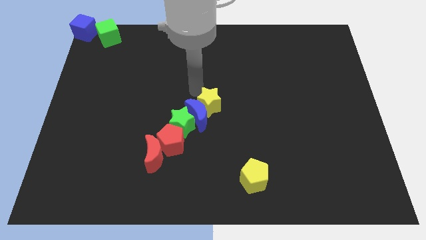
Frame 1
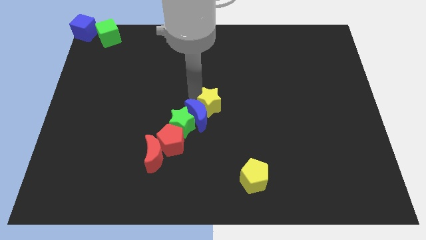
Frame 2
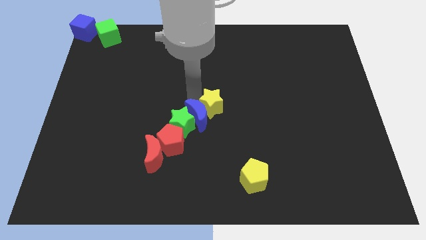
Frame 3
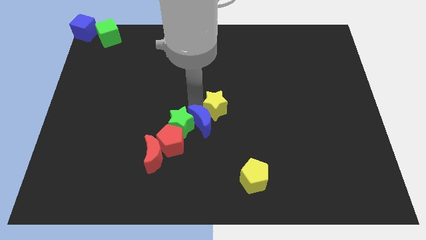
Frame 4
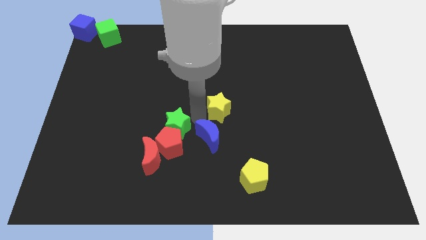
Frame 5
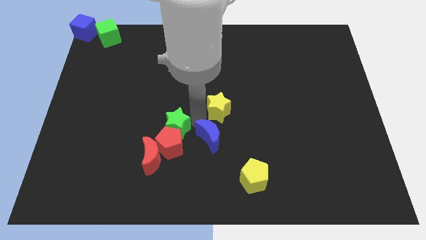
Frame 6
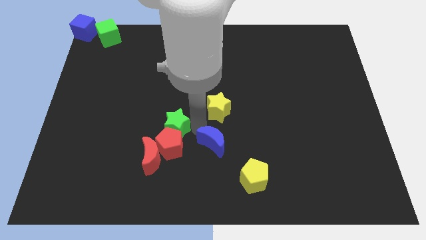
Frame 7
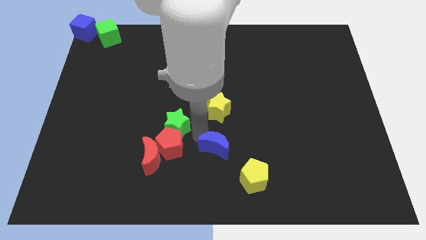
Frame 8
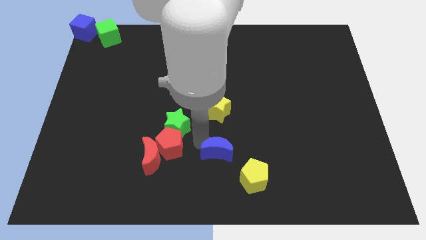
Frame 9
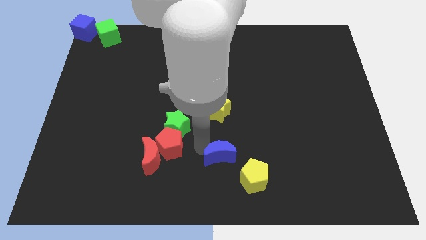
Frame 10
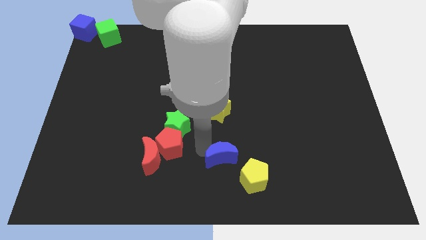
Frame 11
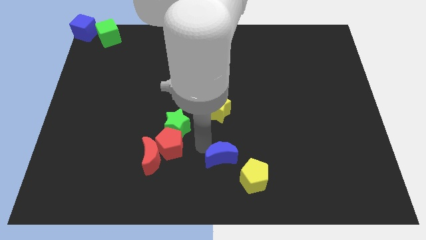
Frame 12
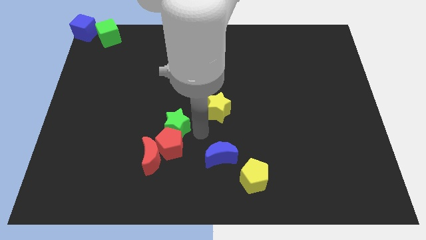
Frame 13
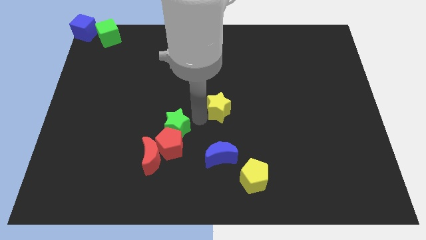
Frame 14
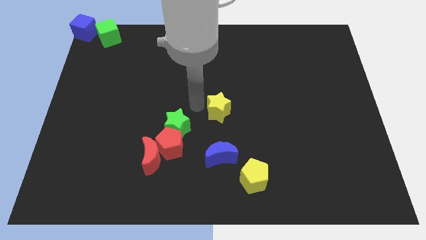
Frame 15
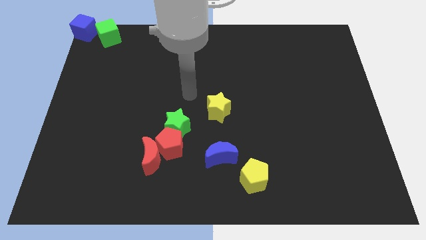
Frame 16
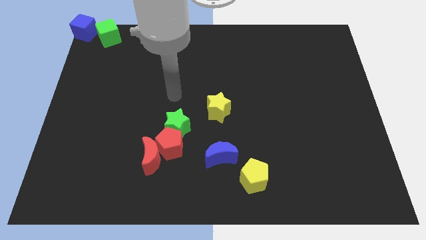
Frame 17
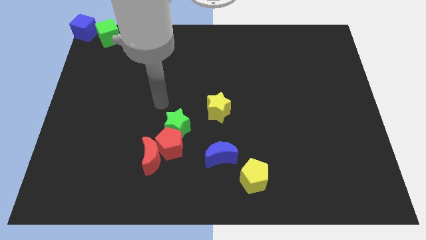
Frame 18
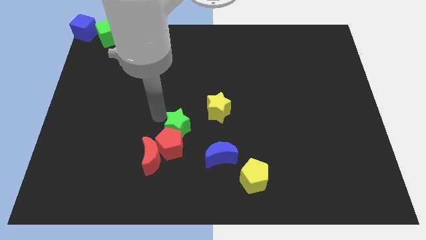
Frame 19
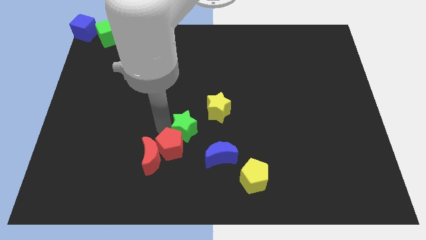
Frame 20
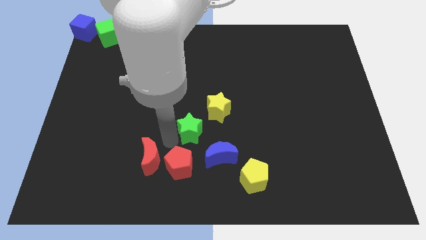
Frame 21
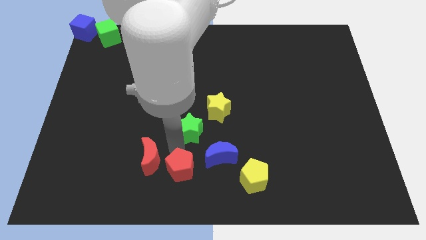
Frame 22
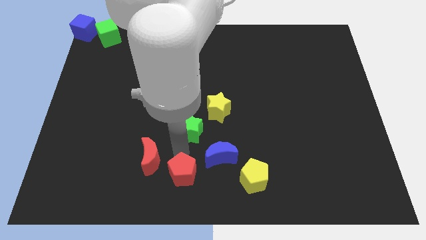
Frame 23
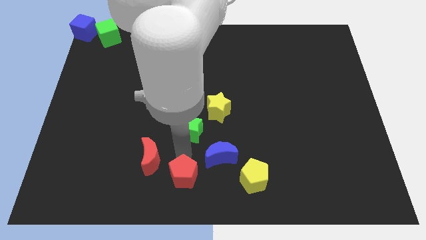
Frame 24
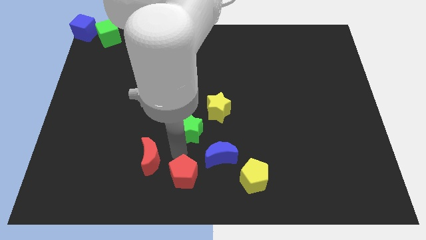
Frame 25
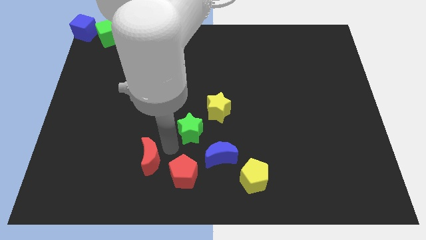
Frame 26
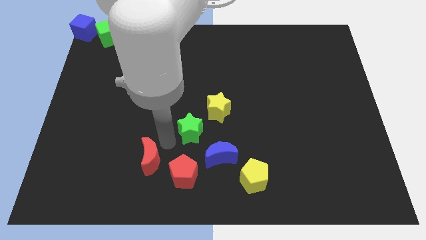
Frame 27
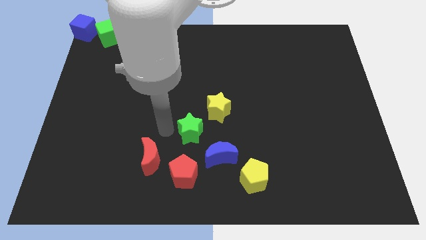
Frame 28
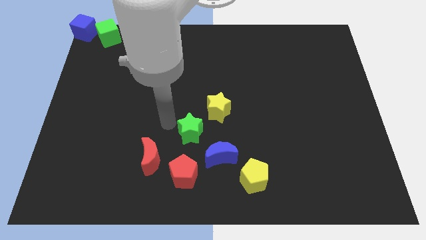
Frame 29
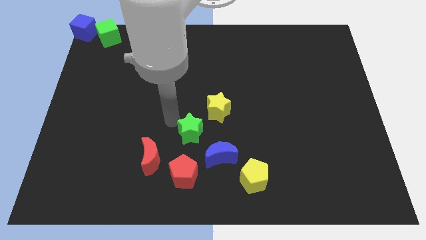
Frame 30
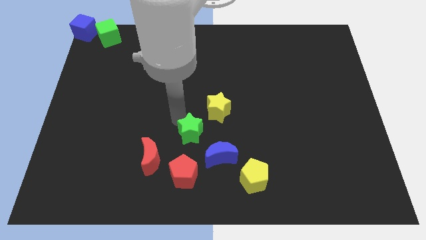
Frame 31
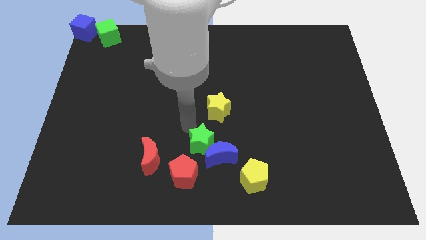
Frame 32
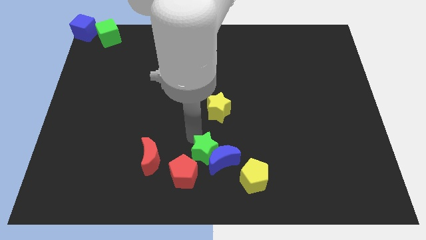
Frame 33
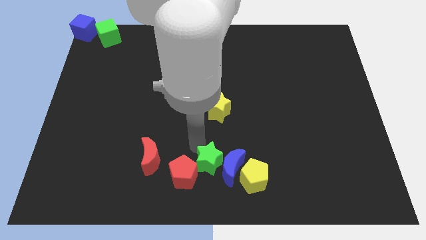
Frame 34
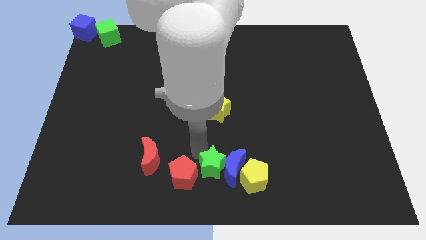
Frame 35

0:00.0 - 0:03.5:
slide the blue crescent green star and red pentagon to the left side of the yellow pentagon

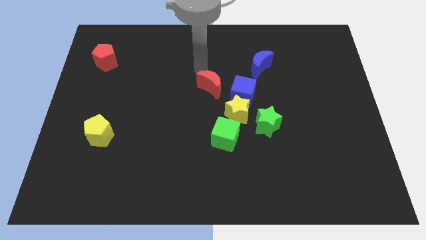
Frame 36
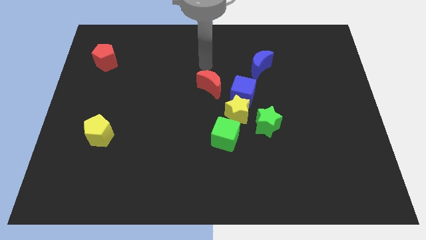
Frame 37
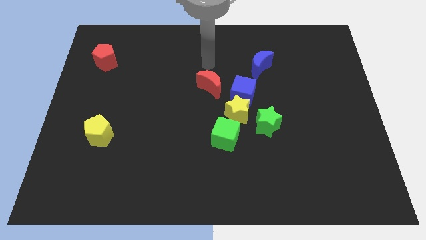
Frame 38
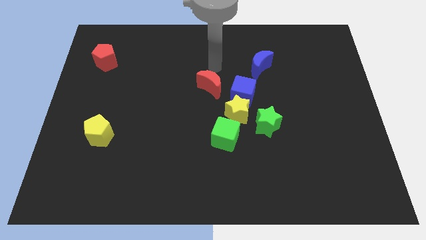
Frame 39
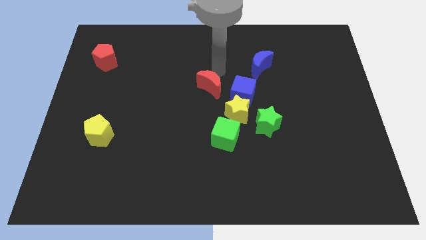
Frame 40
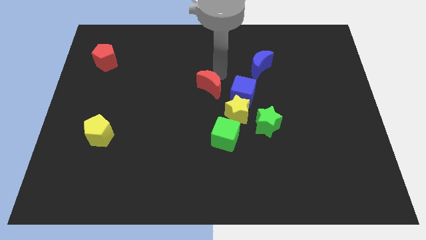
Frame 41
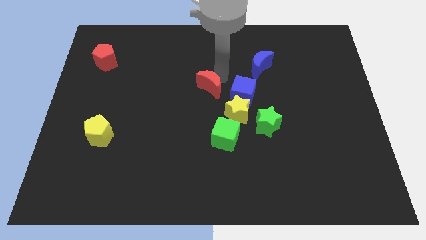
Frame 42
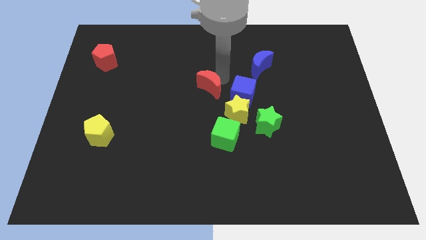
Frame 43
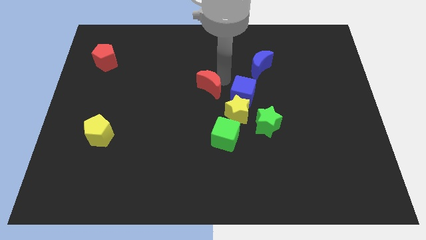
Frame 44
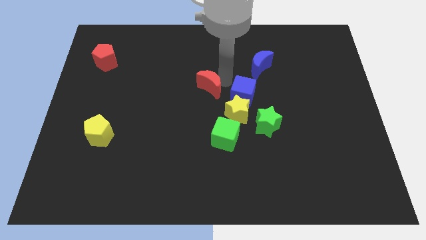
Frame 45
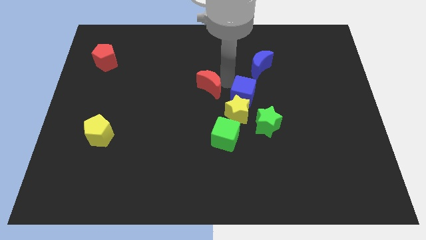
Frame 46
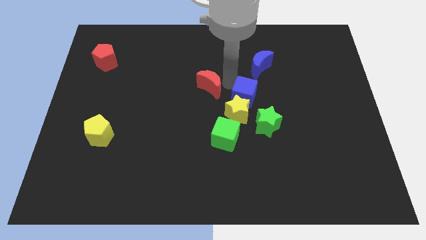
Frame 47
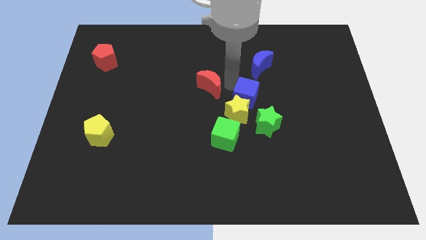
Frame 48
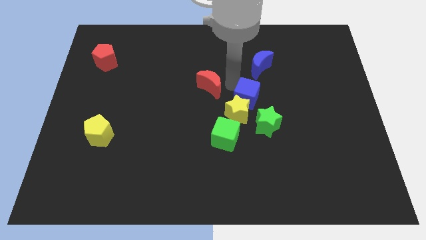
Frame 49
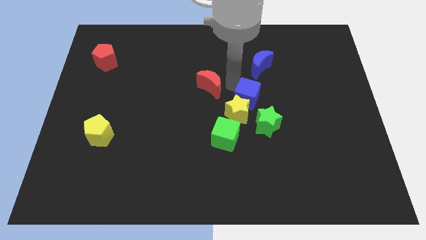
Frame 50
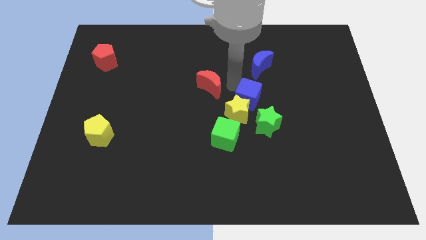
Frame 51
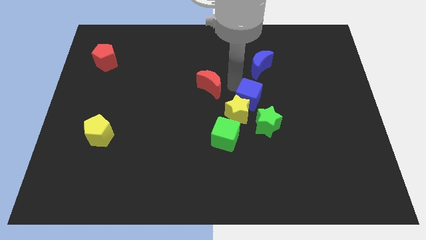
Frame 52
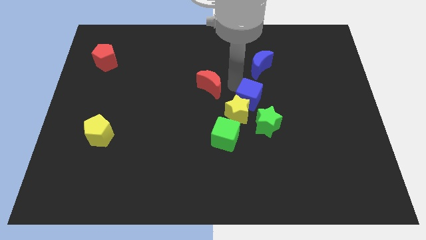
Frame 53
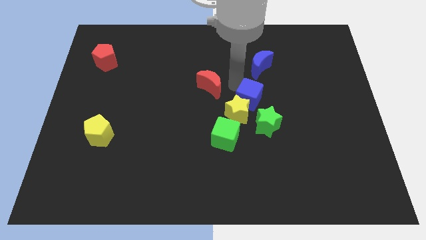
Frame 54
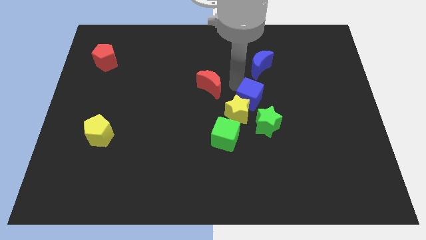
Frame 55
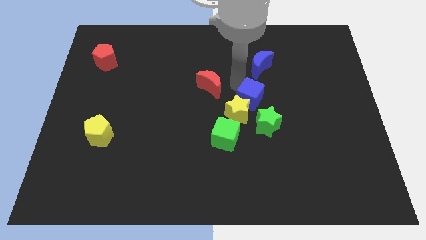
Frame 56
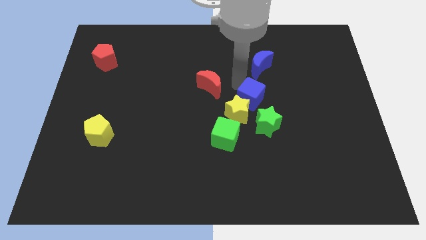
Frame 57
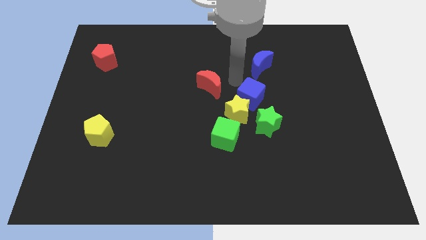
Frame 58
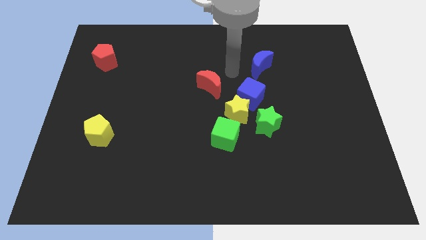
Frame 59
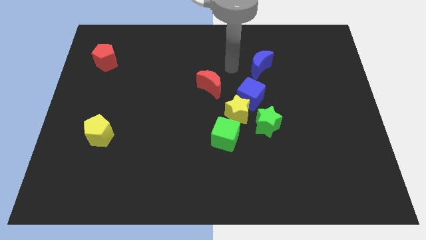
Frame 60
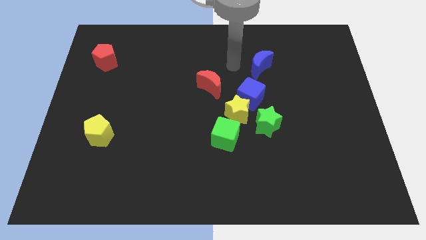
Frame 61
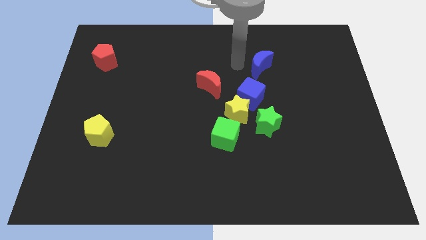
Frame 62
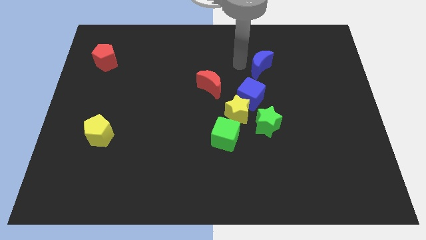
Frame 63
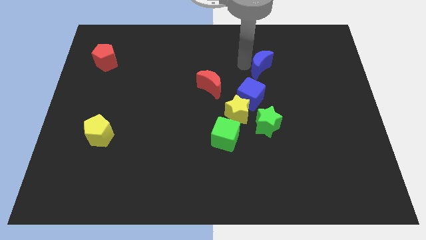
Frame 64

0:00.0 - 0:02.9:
move the arm close to the blue moon

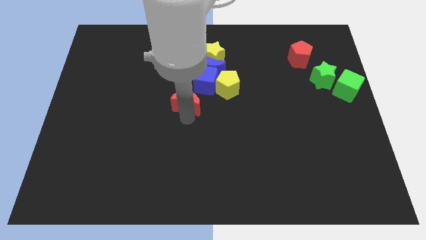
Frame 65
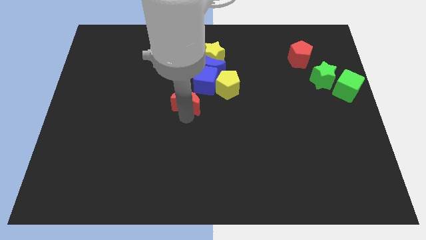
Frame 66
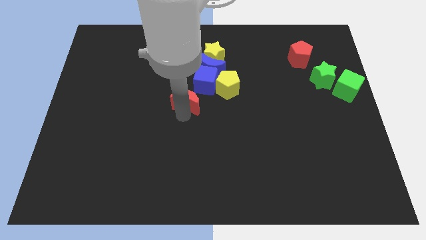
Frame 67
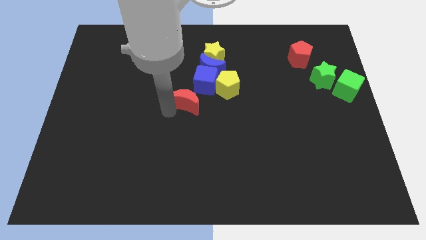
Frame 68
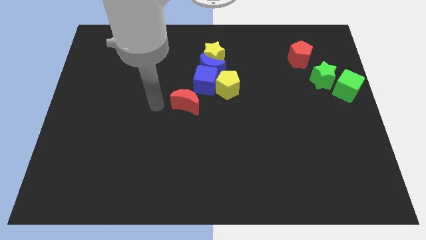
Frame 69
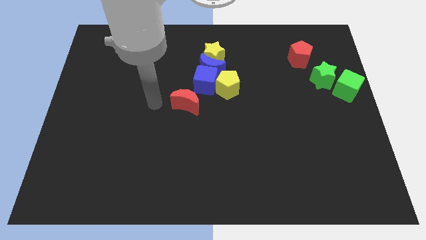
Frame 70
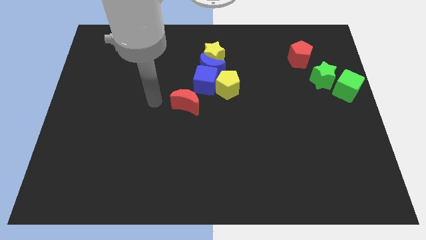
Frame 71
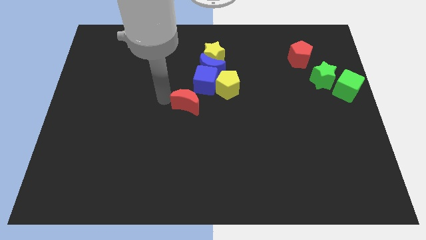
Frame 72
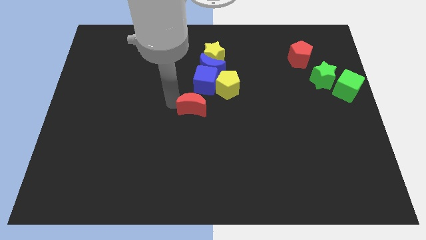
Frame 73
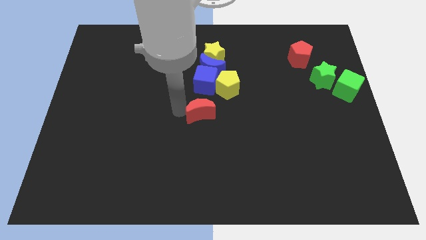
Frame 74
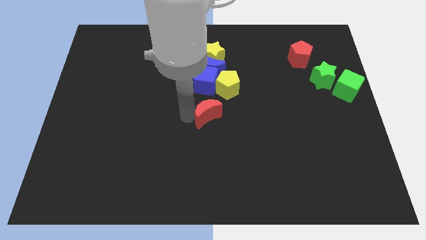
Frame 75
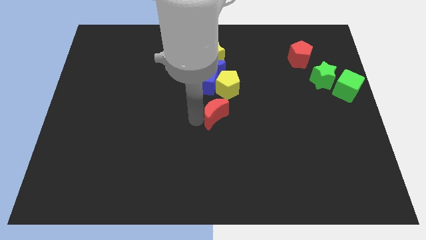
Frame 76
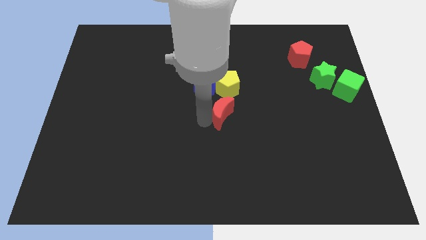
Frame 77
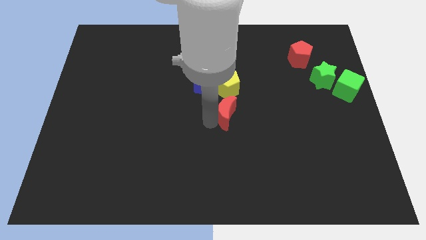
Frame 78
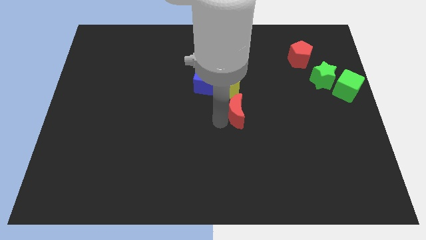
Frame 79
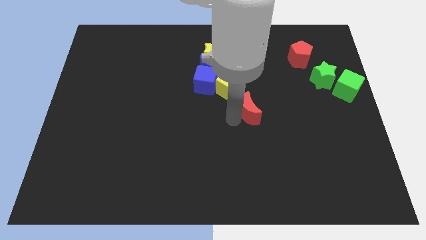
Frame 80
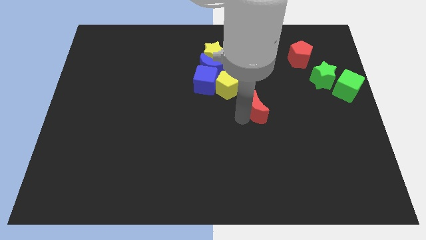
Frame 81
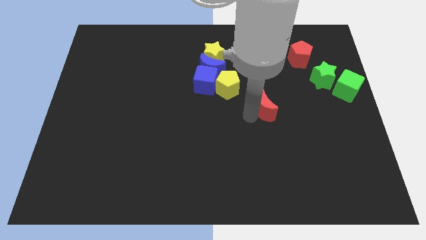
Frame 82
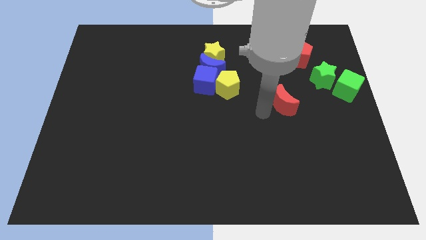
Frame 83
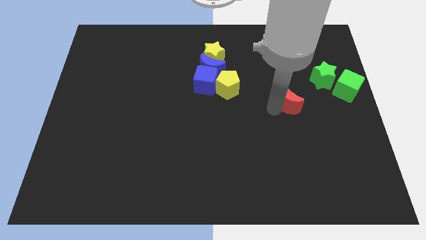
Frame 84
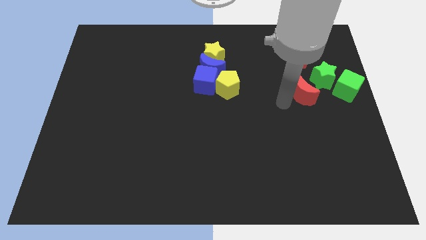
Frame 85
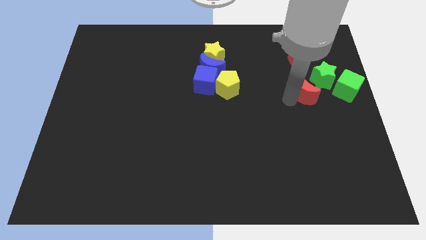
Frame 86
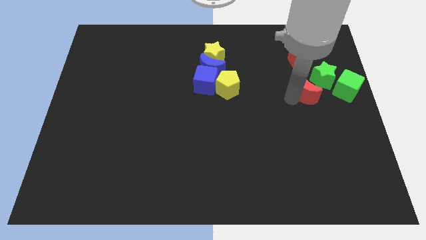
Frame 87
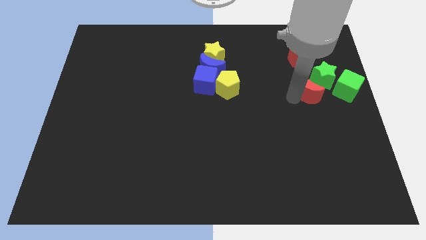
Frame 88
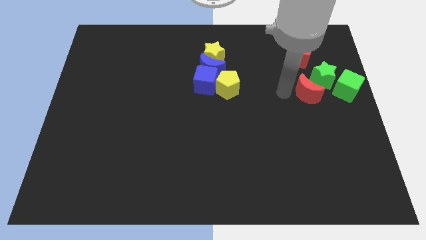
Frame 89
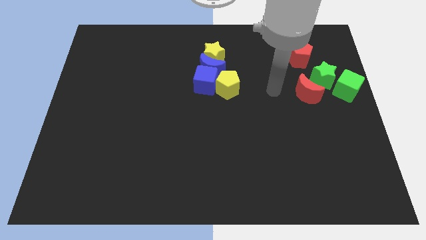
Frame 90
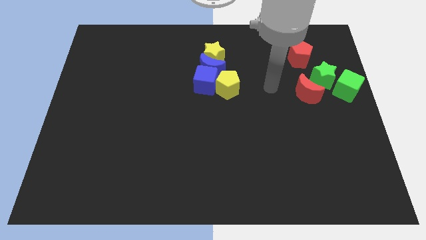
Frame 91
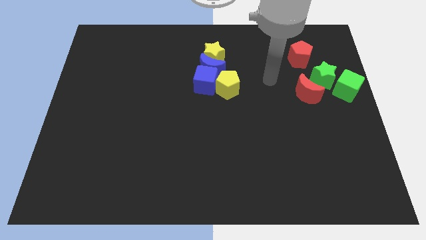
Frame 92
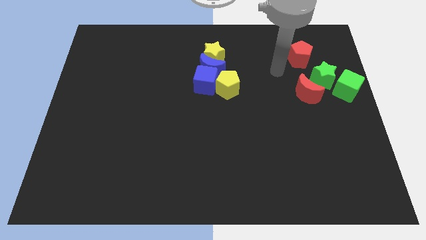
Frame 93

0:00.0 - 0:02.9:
move the red crescent to the left of the green star
